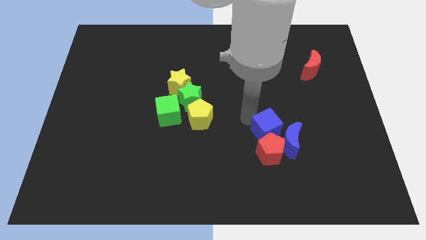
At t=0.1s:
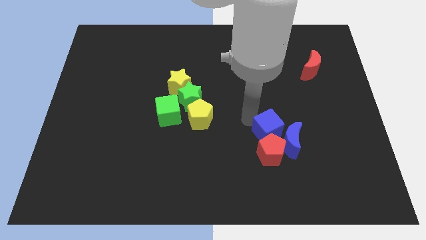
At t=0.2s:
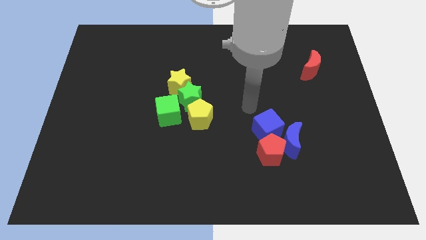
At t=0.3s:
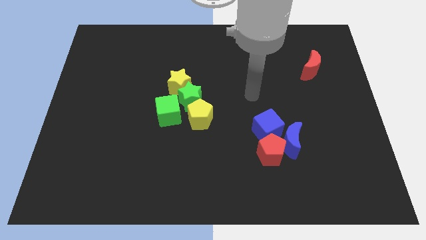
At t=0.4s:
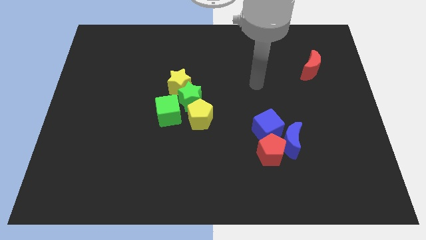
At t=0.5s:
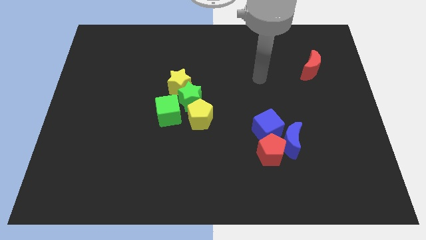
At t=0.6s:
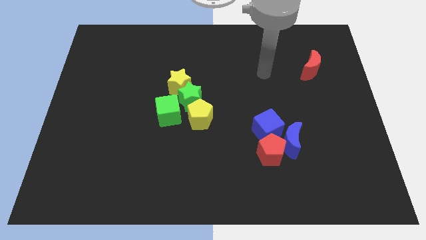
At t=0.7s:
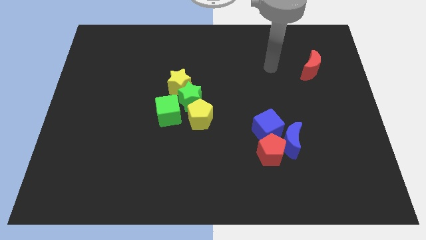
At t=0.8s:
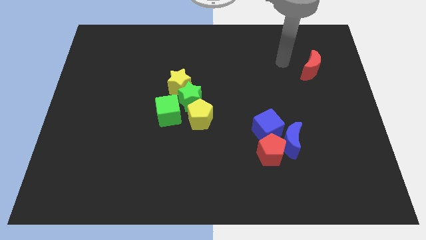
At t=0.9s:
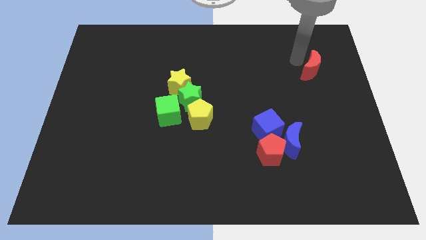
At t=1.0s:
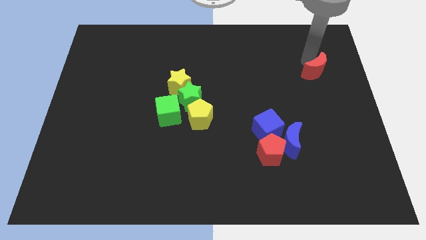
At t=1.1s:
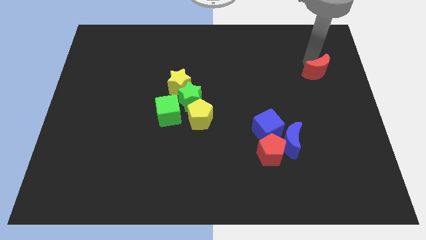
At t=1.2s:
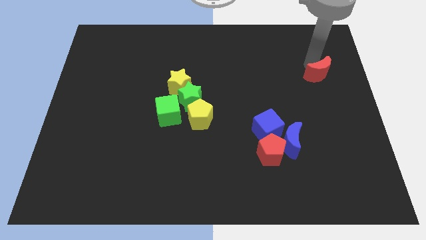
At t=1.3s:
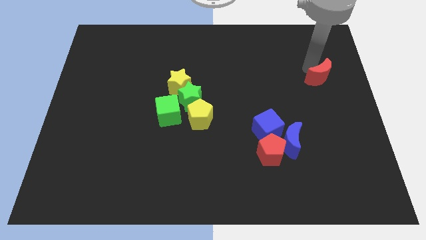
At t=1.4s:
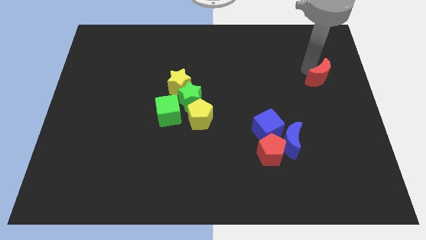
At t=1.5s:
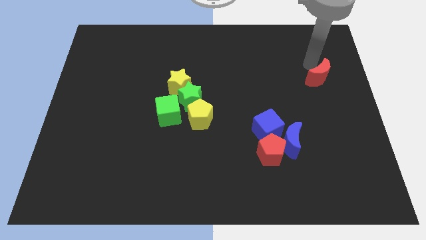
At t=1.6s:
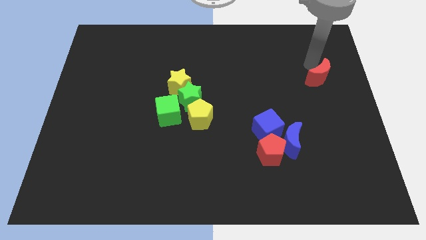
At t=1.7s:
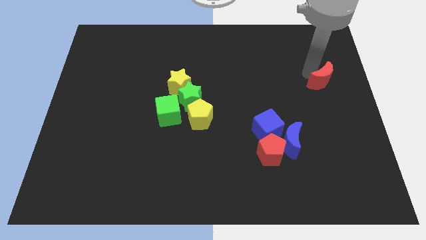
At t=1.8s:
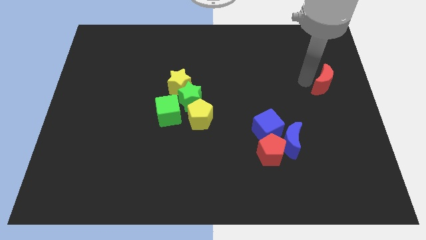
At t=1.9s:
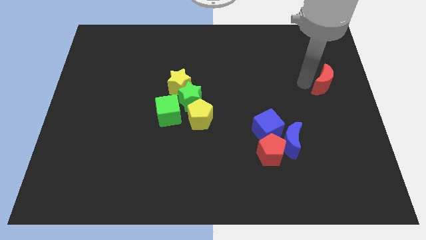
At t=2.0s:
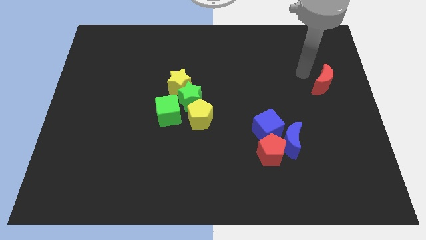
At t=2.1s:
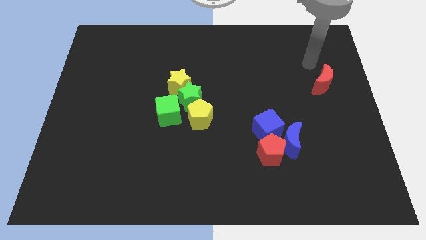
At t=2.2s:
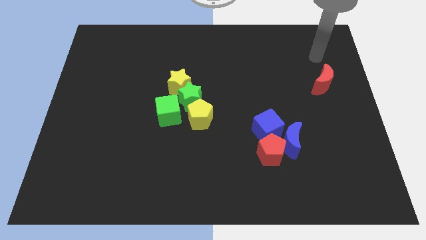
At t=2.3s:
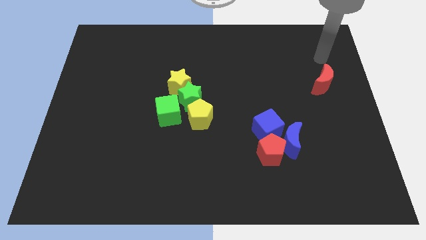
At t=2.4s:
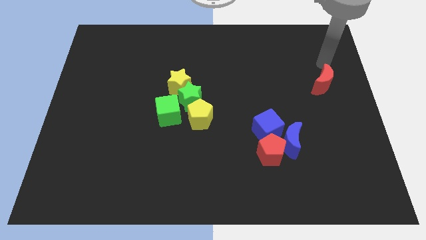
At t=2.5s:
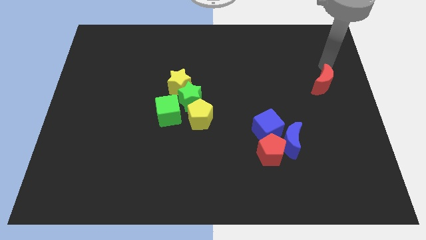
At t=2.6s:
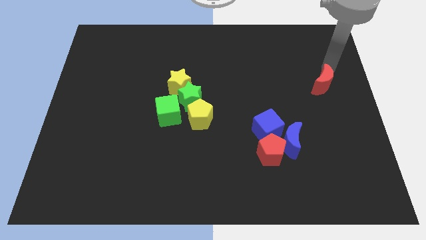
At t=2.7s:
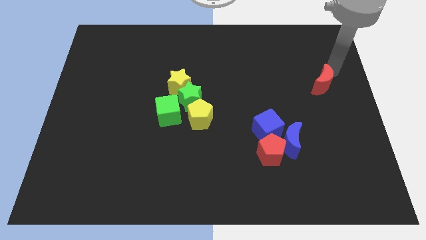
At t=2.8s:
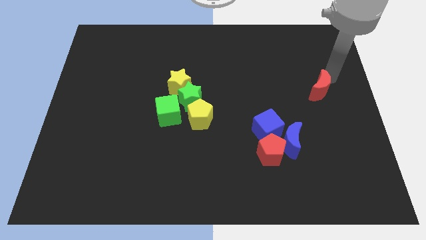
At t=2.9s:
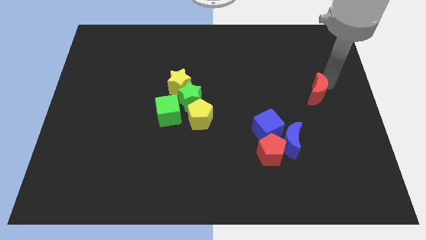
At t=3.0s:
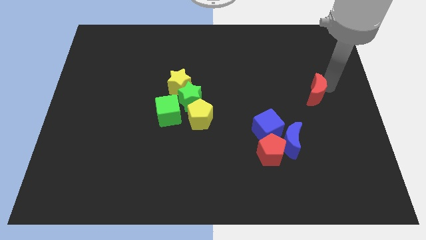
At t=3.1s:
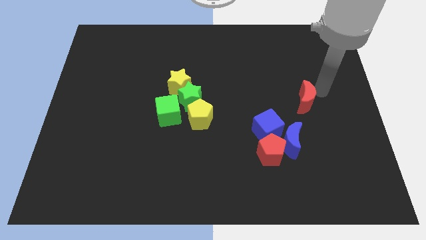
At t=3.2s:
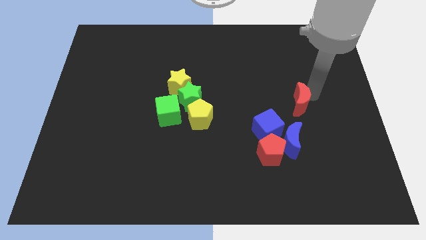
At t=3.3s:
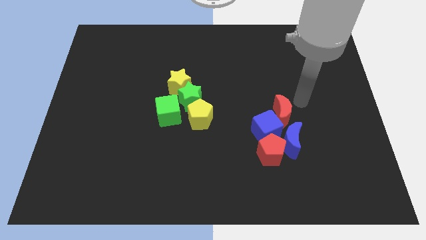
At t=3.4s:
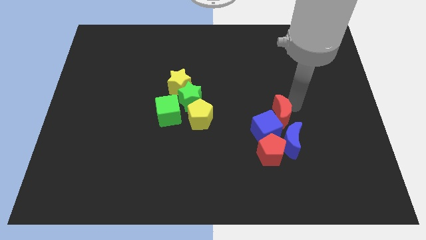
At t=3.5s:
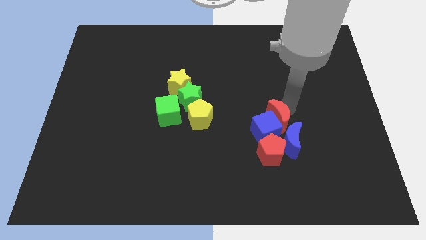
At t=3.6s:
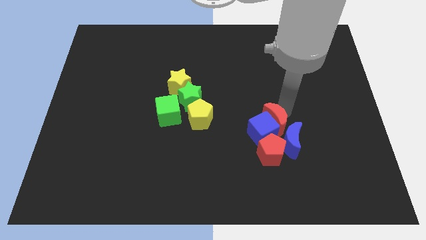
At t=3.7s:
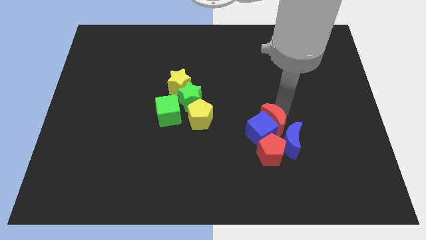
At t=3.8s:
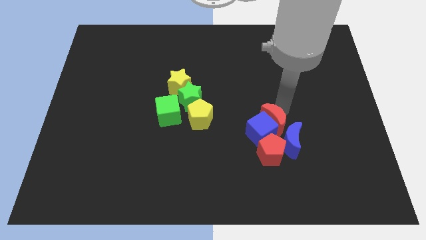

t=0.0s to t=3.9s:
push the red moon into to the blue cube

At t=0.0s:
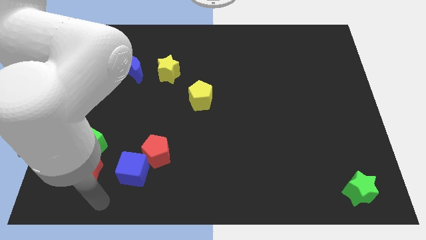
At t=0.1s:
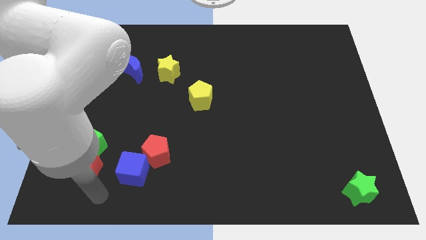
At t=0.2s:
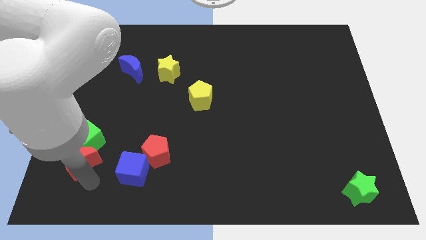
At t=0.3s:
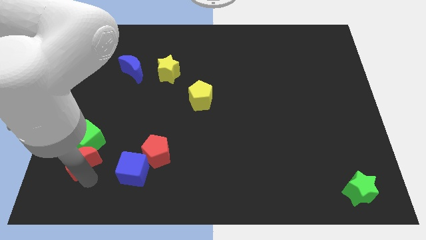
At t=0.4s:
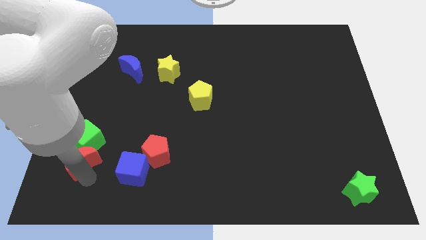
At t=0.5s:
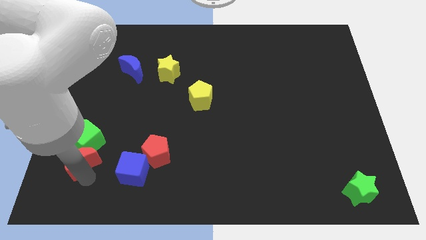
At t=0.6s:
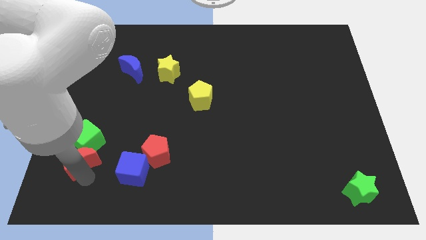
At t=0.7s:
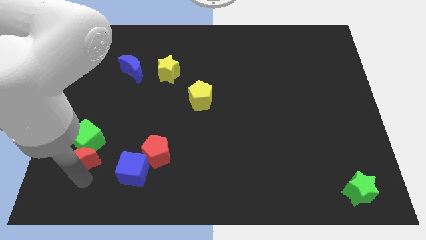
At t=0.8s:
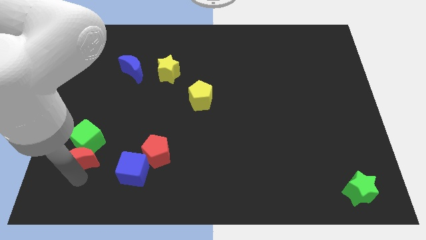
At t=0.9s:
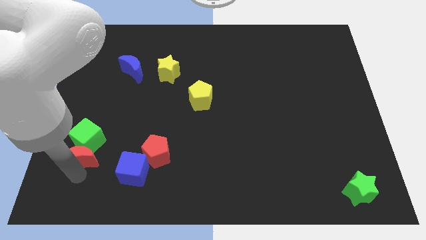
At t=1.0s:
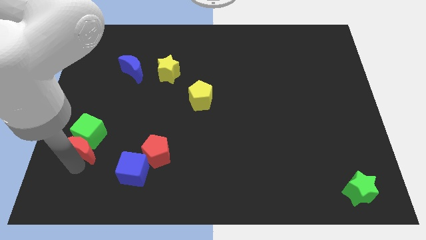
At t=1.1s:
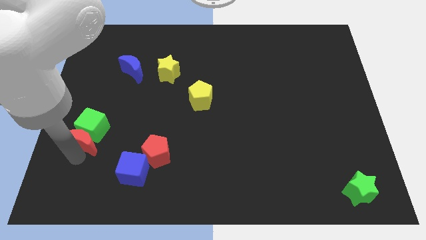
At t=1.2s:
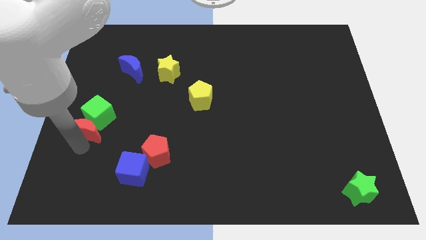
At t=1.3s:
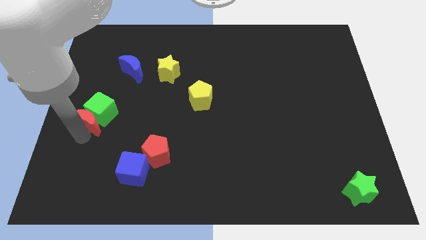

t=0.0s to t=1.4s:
push the green cube with the red moon slightly up

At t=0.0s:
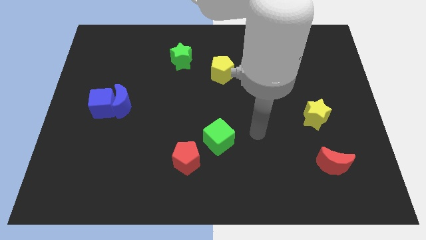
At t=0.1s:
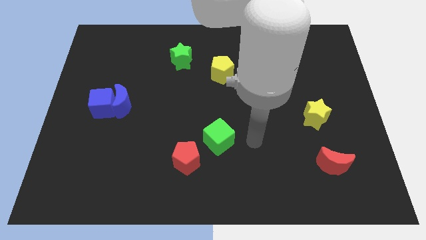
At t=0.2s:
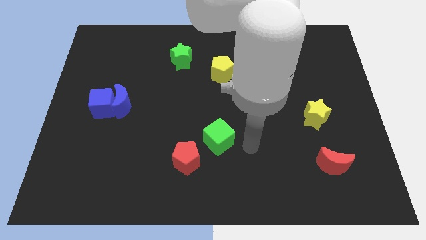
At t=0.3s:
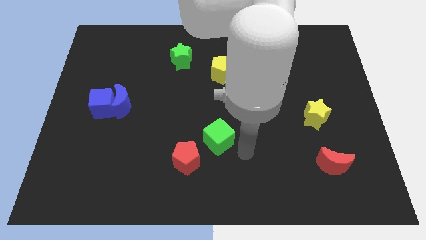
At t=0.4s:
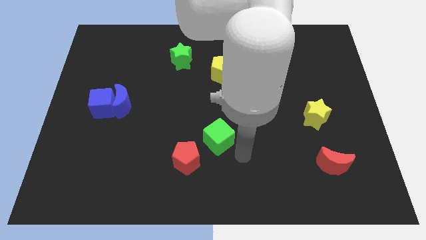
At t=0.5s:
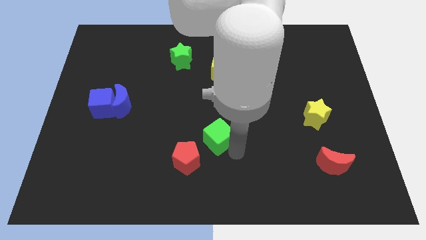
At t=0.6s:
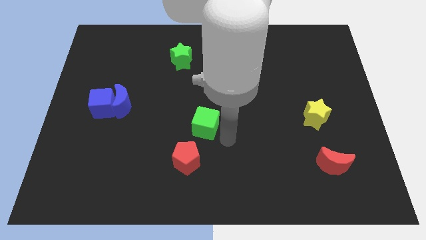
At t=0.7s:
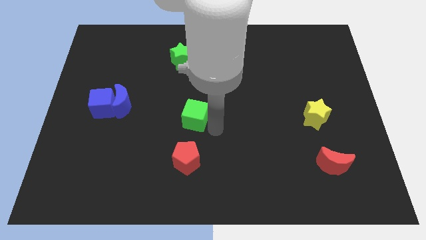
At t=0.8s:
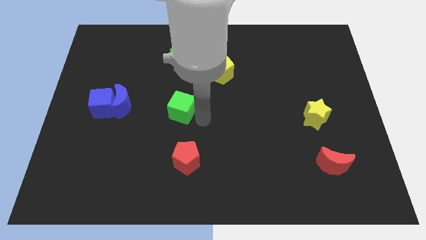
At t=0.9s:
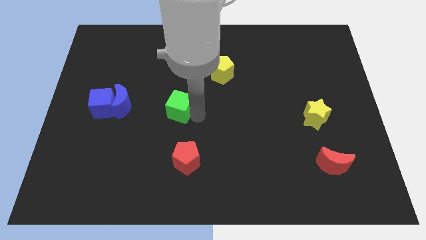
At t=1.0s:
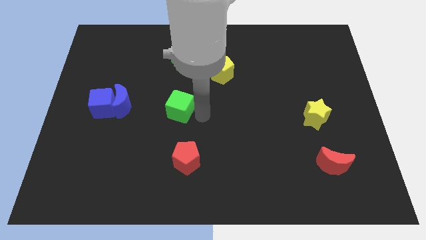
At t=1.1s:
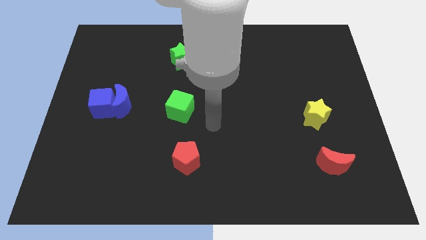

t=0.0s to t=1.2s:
place green cube parallel to blue moon

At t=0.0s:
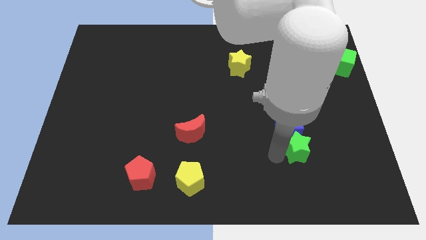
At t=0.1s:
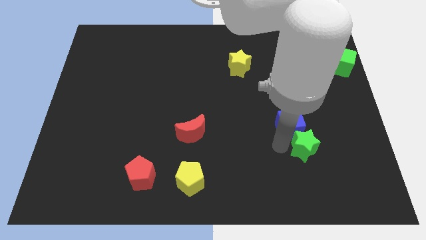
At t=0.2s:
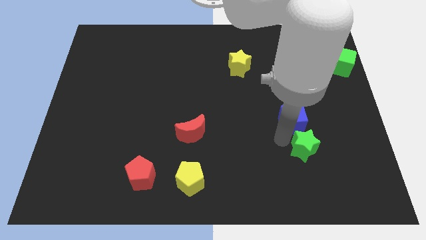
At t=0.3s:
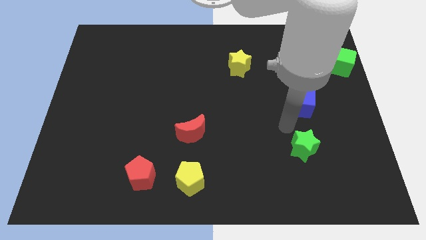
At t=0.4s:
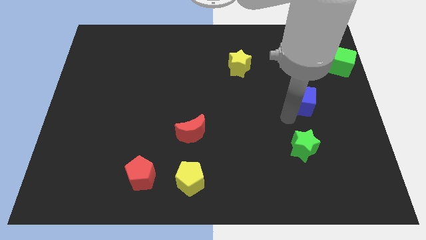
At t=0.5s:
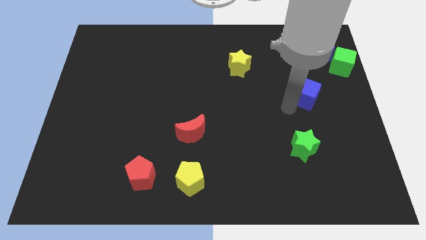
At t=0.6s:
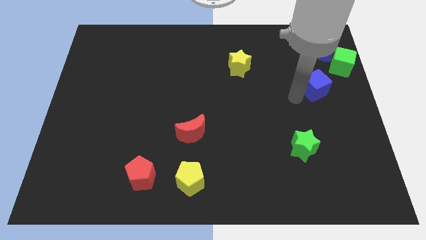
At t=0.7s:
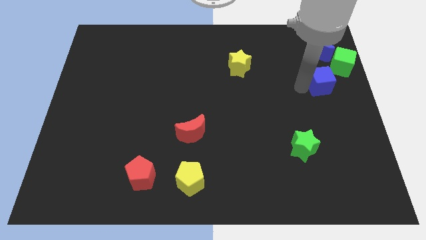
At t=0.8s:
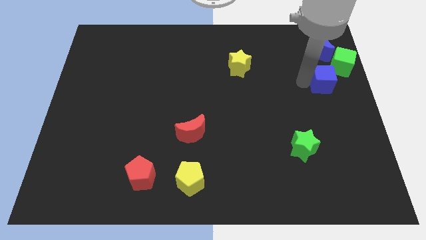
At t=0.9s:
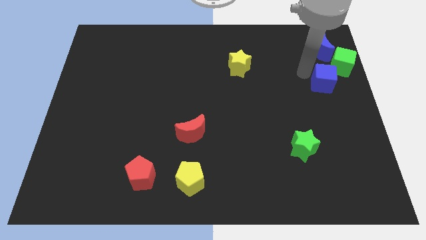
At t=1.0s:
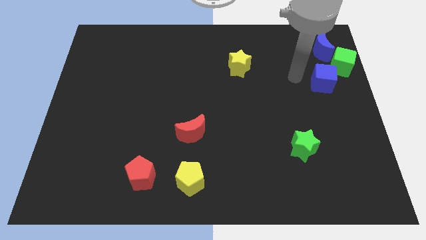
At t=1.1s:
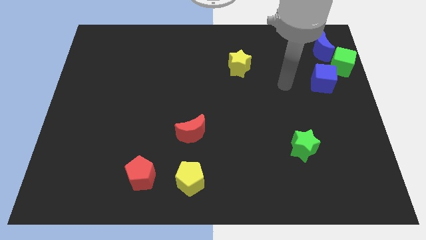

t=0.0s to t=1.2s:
separate the blue cube from the green star

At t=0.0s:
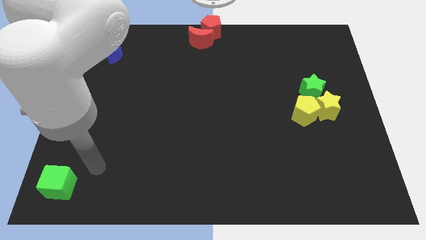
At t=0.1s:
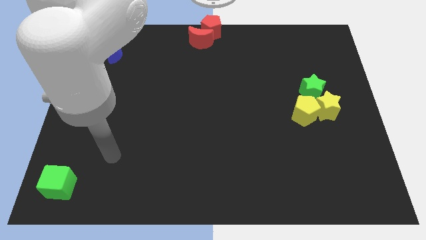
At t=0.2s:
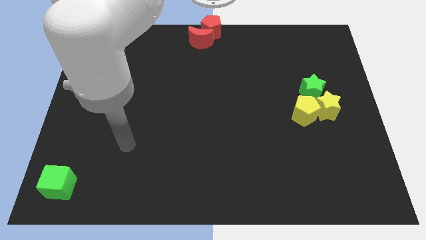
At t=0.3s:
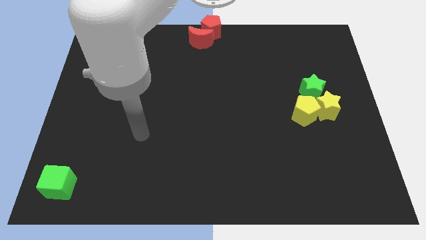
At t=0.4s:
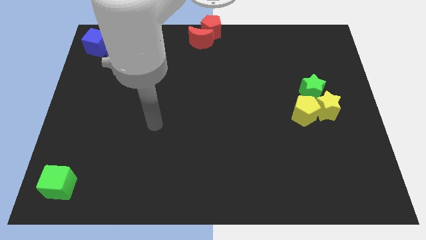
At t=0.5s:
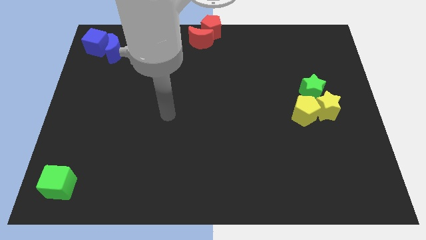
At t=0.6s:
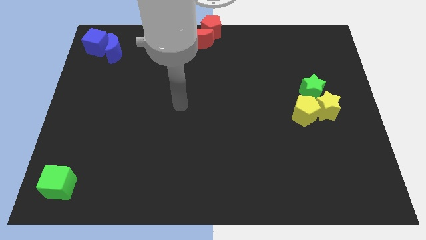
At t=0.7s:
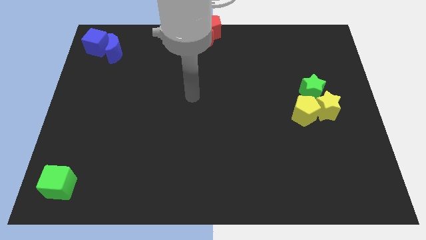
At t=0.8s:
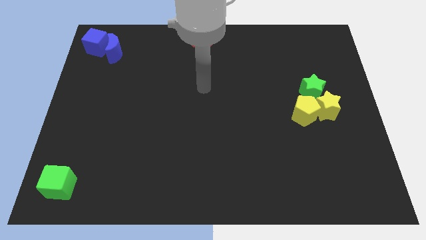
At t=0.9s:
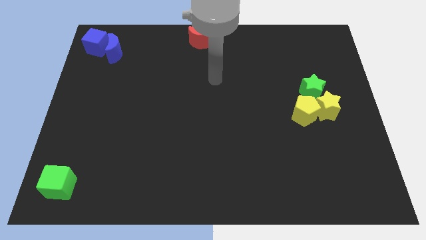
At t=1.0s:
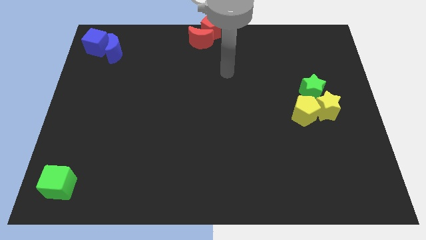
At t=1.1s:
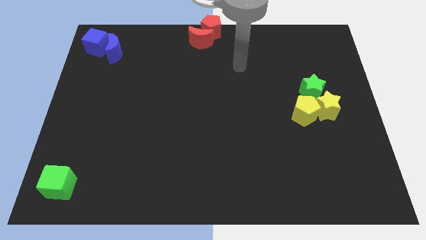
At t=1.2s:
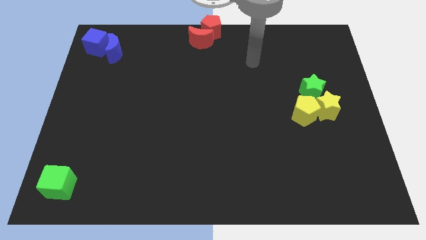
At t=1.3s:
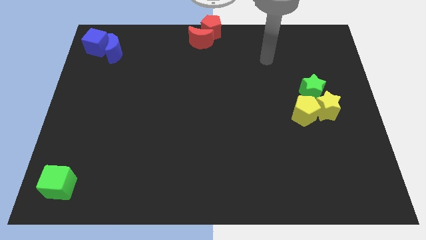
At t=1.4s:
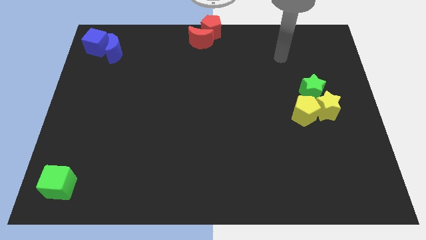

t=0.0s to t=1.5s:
move the arm diagonally up
